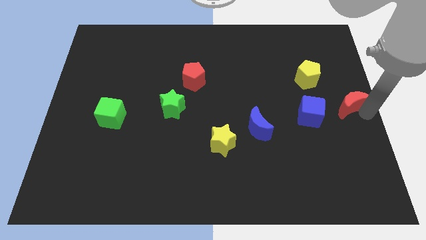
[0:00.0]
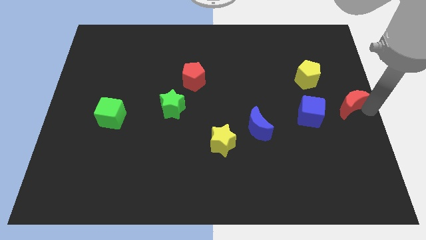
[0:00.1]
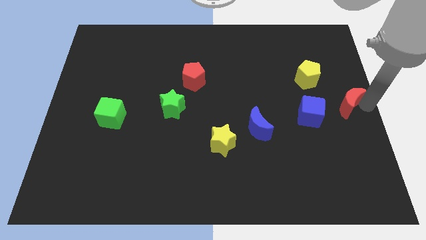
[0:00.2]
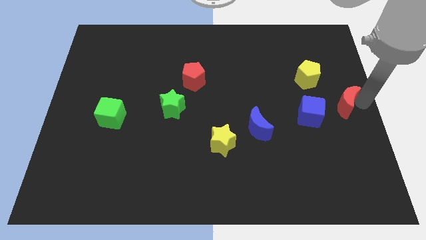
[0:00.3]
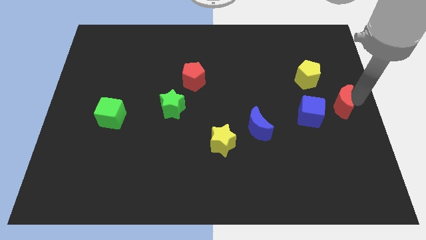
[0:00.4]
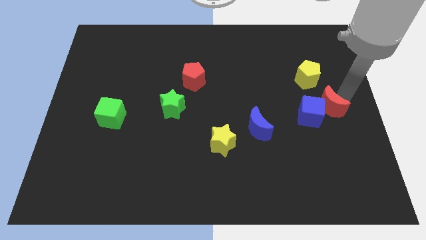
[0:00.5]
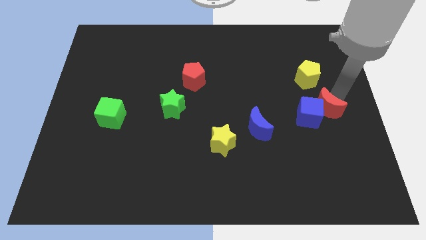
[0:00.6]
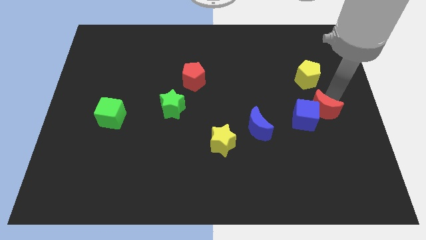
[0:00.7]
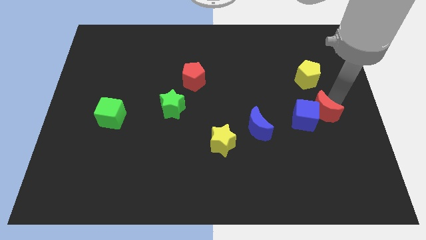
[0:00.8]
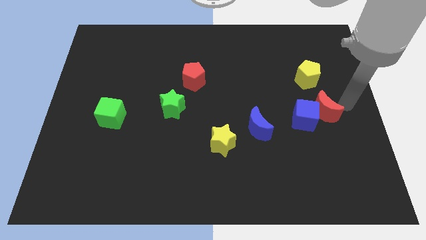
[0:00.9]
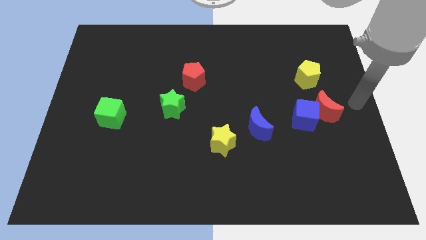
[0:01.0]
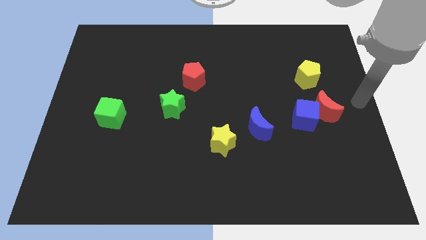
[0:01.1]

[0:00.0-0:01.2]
move red moon close to blue cube

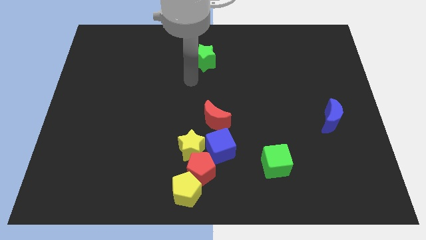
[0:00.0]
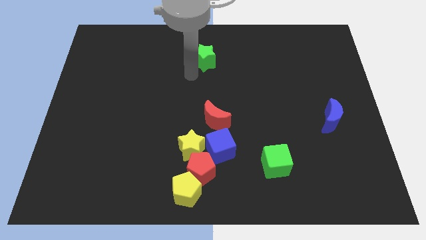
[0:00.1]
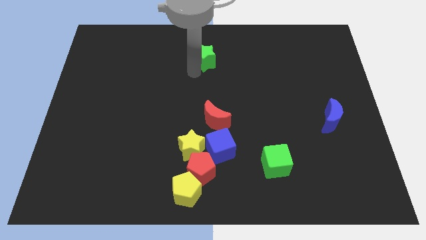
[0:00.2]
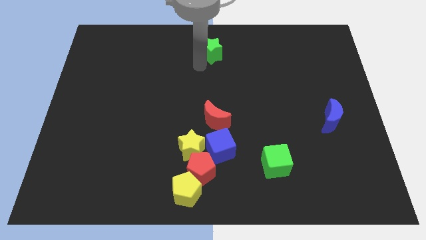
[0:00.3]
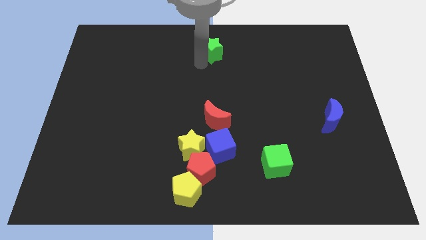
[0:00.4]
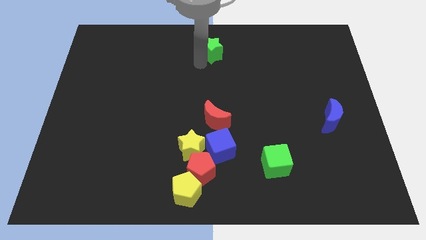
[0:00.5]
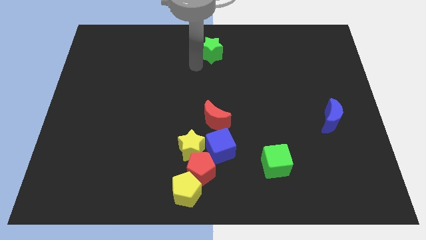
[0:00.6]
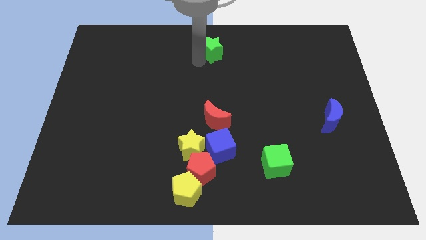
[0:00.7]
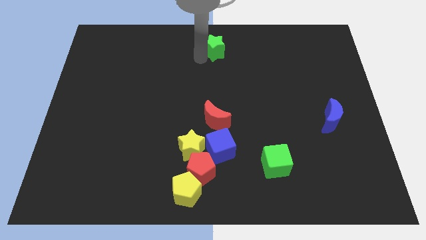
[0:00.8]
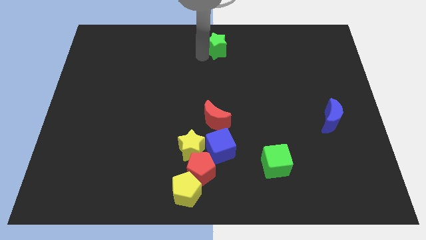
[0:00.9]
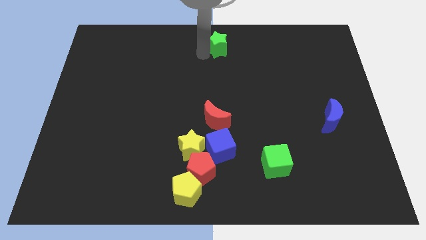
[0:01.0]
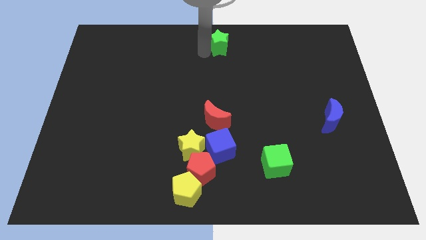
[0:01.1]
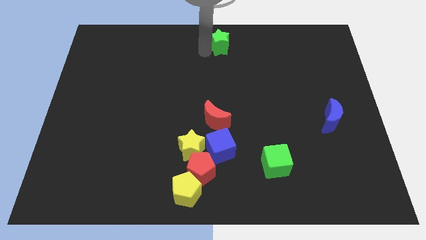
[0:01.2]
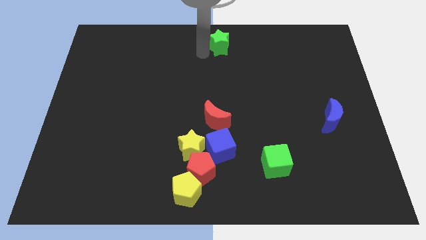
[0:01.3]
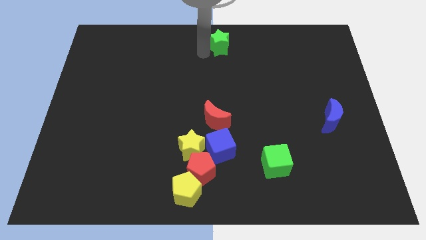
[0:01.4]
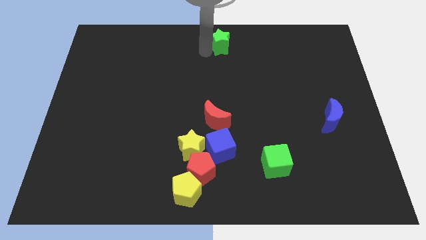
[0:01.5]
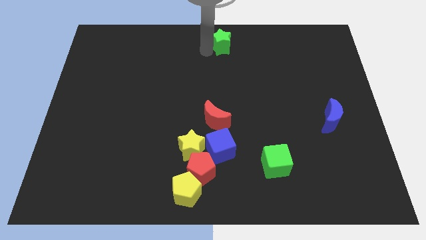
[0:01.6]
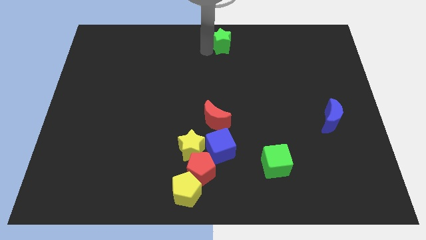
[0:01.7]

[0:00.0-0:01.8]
move the green star to the center top

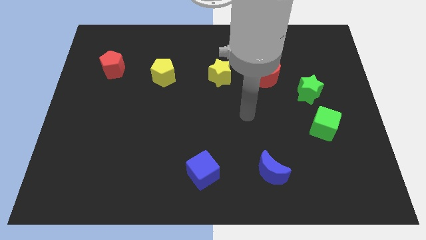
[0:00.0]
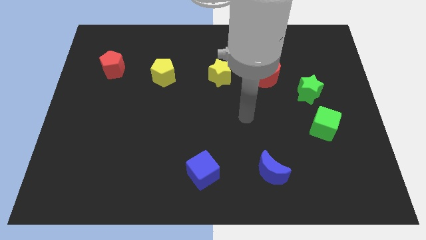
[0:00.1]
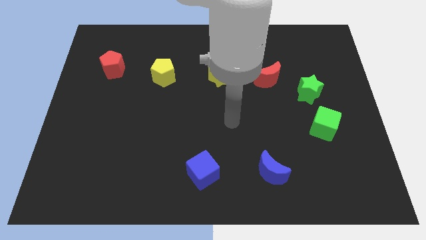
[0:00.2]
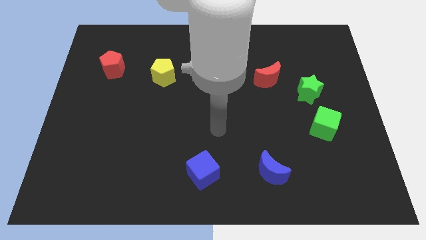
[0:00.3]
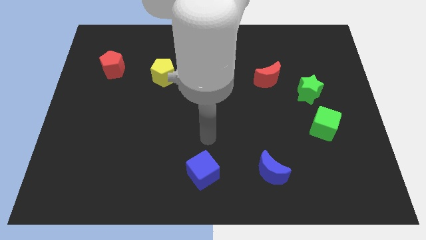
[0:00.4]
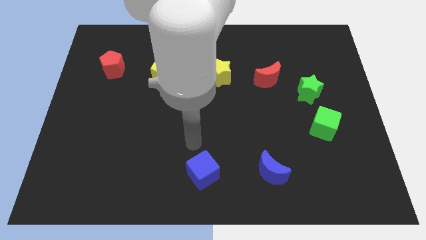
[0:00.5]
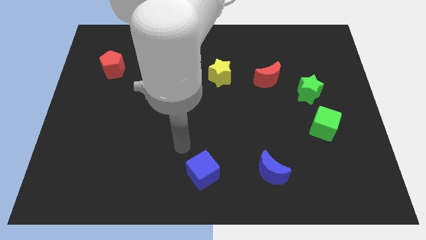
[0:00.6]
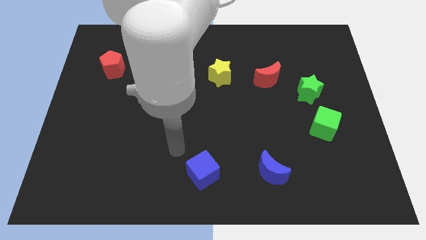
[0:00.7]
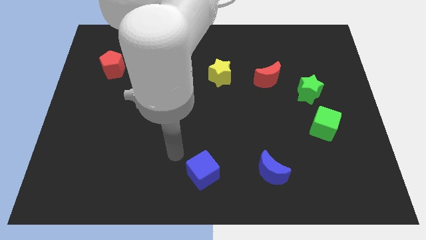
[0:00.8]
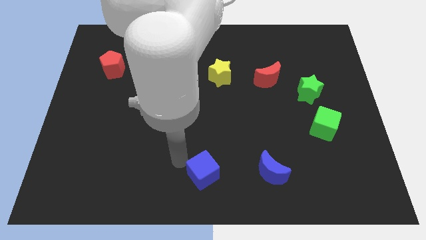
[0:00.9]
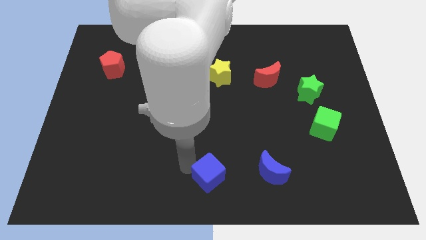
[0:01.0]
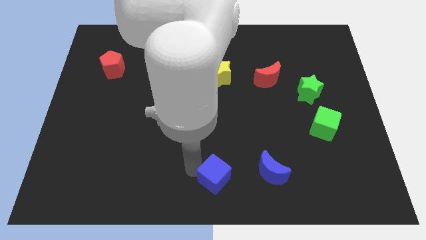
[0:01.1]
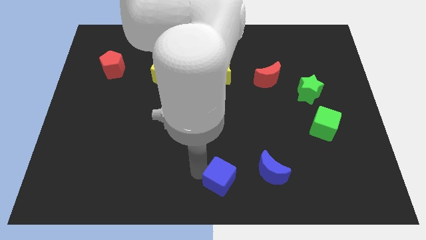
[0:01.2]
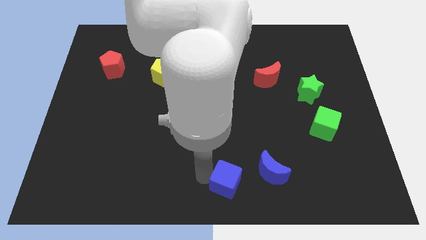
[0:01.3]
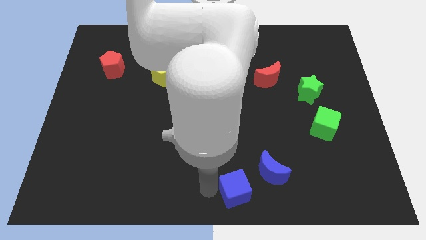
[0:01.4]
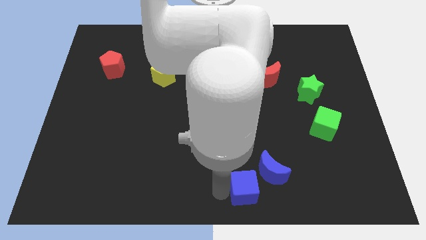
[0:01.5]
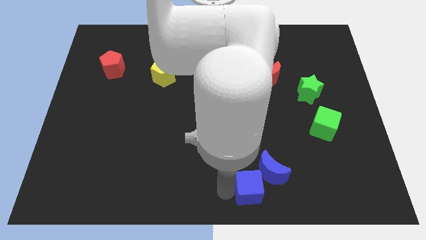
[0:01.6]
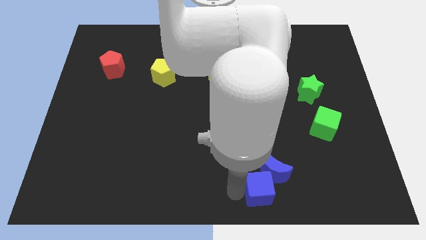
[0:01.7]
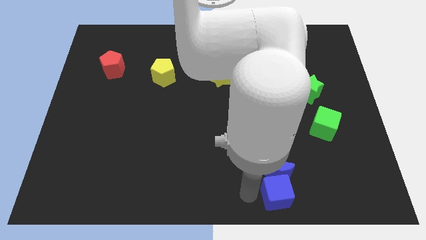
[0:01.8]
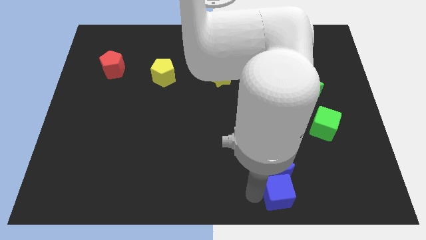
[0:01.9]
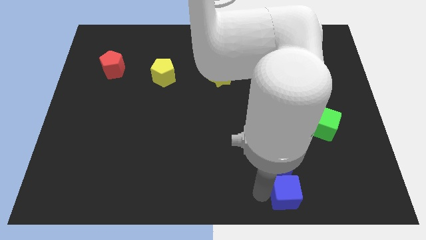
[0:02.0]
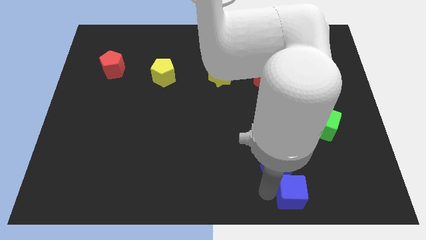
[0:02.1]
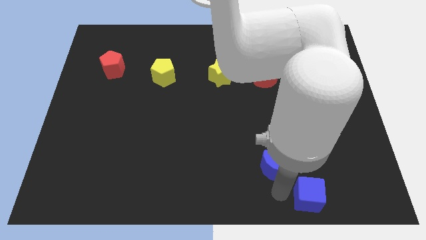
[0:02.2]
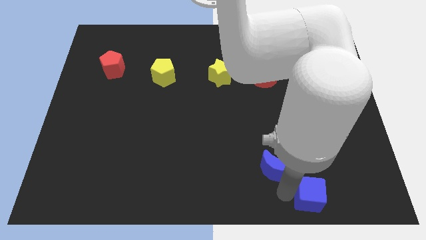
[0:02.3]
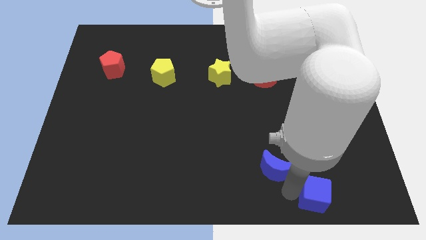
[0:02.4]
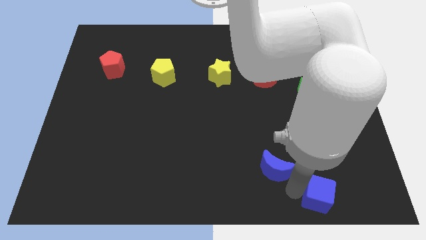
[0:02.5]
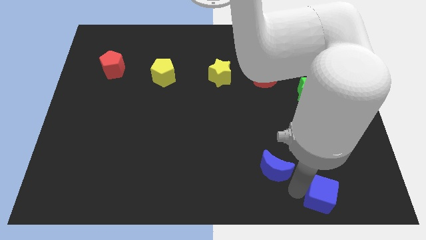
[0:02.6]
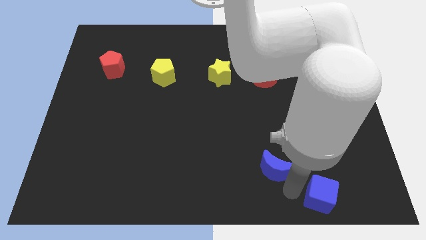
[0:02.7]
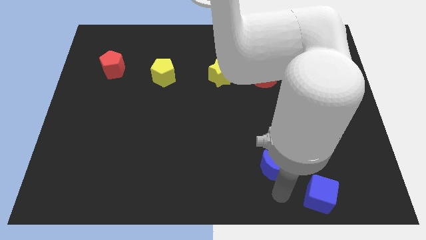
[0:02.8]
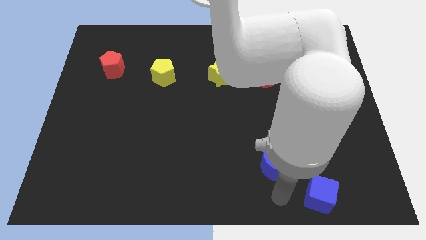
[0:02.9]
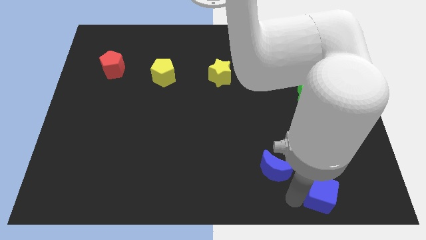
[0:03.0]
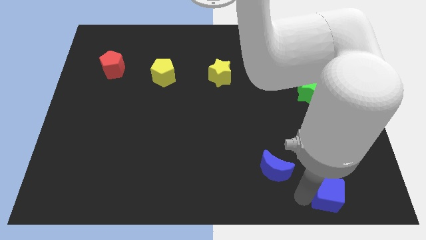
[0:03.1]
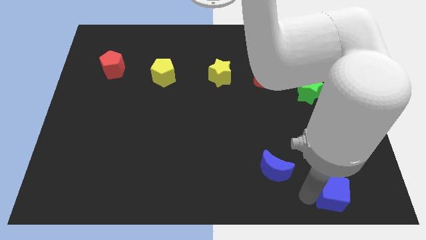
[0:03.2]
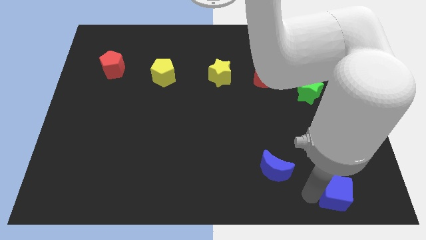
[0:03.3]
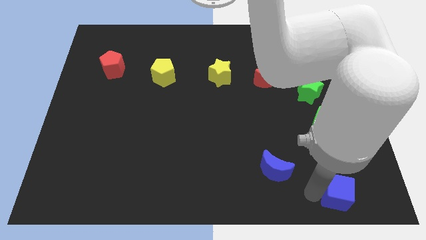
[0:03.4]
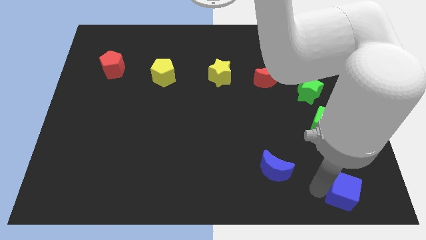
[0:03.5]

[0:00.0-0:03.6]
place the blue cube to the bottom right

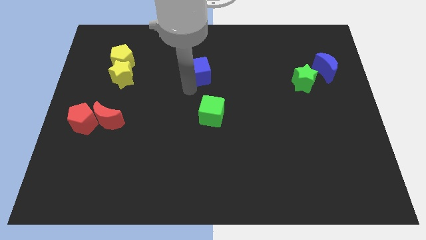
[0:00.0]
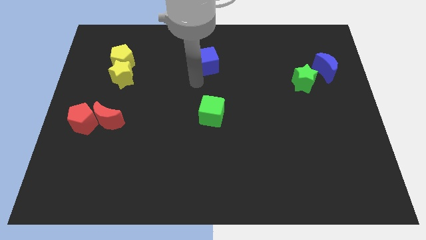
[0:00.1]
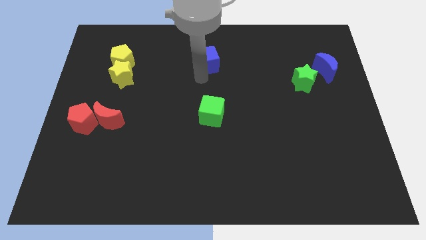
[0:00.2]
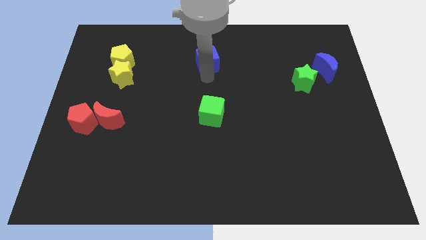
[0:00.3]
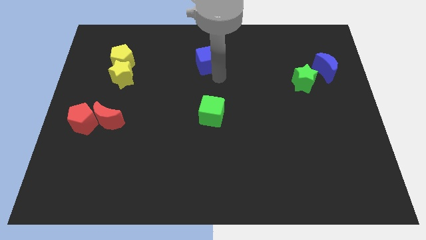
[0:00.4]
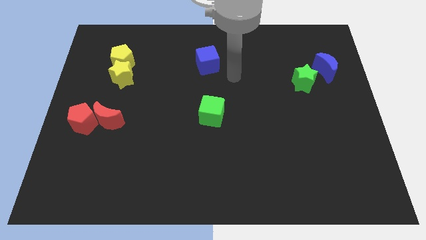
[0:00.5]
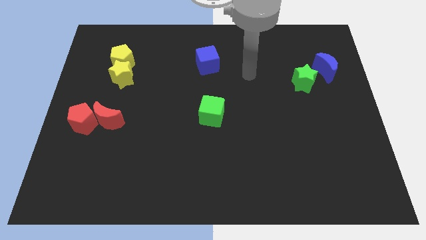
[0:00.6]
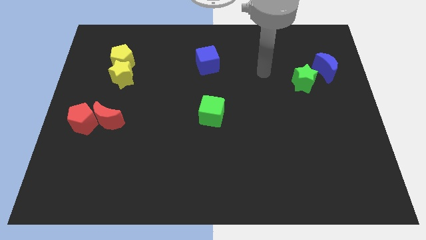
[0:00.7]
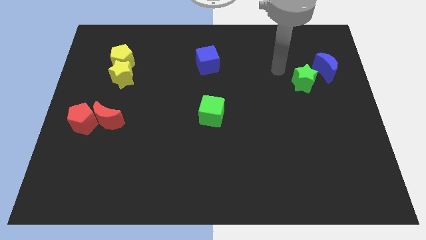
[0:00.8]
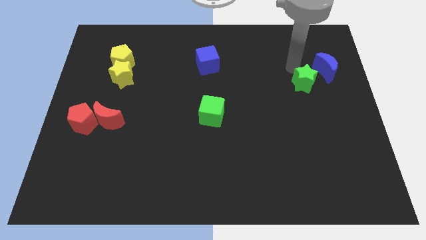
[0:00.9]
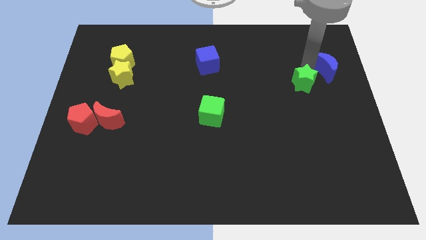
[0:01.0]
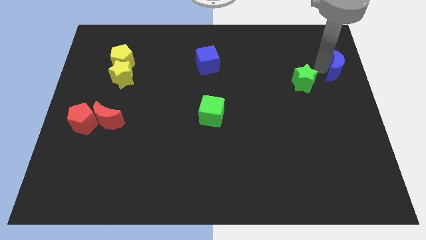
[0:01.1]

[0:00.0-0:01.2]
move your arm close to the green star

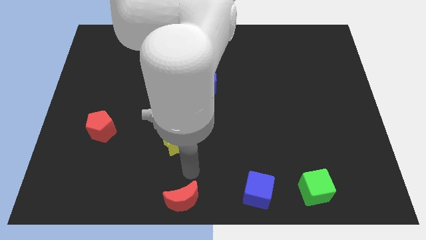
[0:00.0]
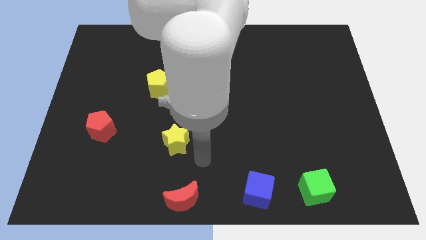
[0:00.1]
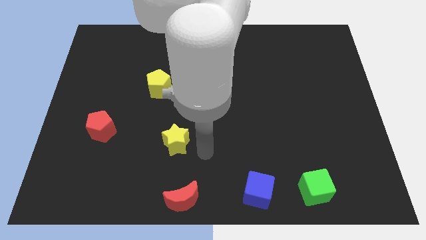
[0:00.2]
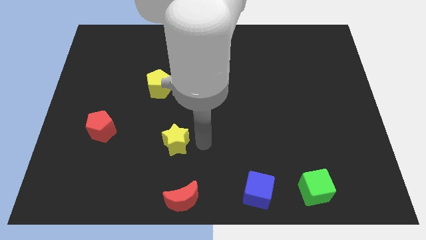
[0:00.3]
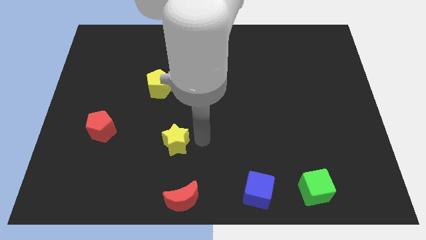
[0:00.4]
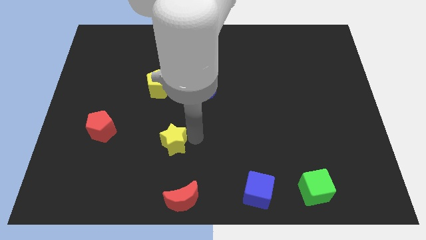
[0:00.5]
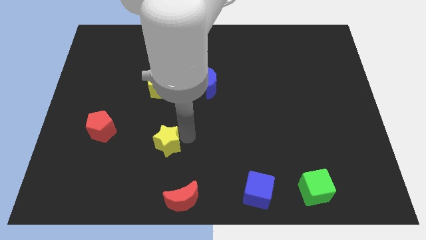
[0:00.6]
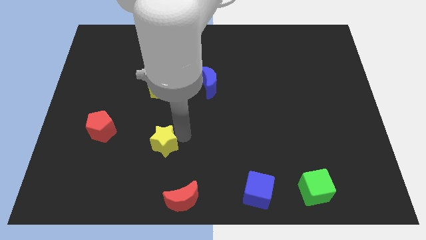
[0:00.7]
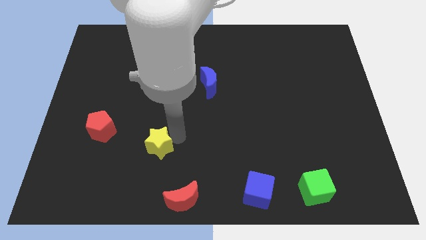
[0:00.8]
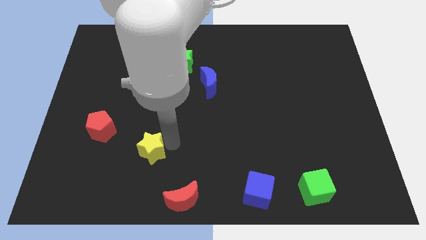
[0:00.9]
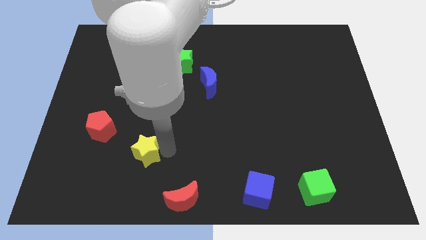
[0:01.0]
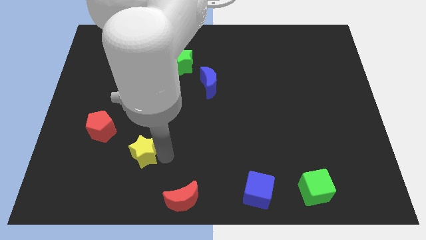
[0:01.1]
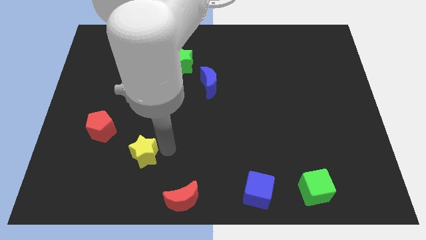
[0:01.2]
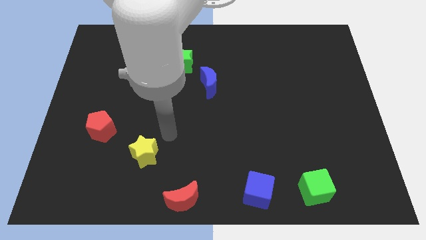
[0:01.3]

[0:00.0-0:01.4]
push the yellow star towards the bottom left corner of the board

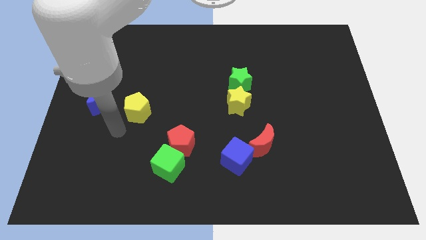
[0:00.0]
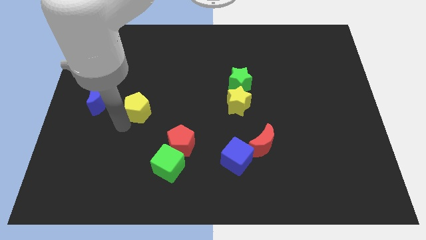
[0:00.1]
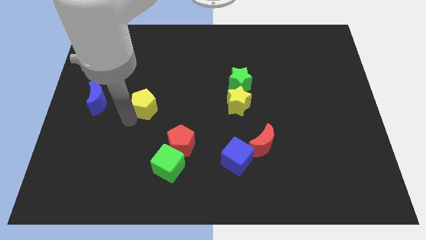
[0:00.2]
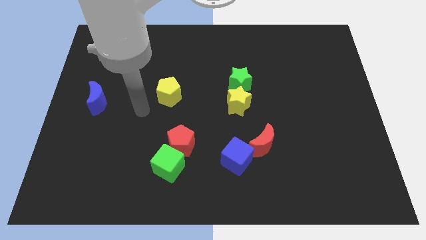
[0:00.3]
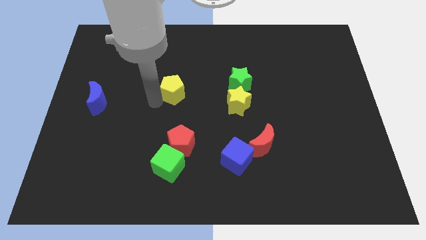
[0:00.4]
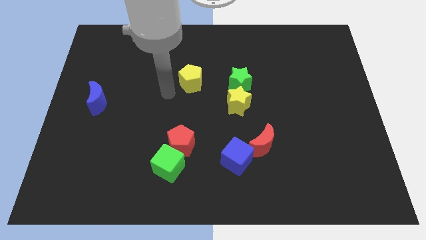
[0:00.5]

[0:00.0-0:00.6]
move the yellow pentagon to the top of the red pentagon
